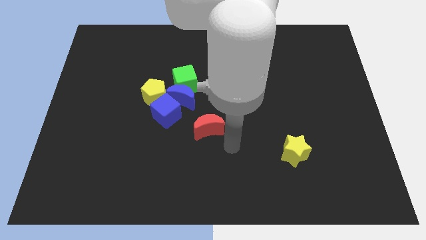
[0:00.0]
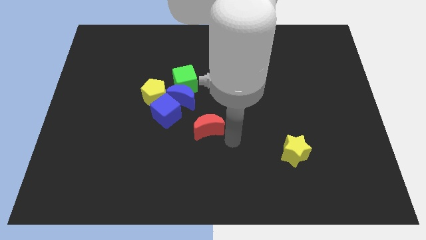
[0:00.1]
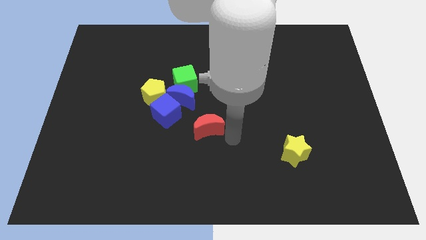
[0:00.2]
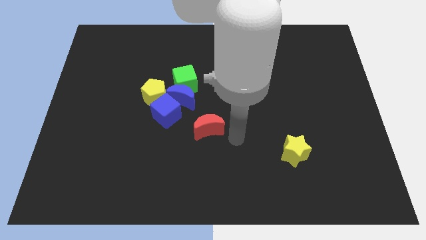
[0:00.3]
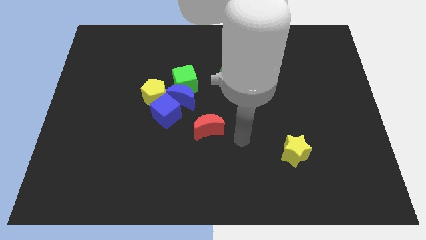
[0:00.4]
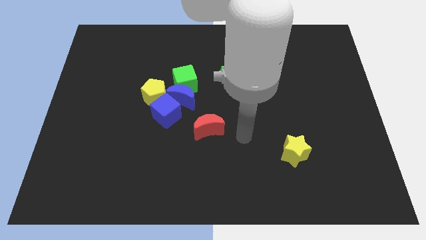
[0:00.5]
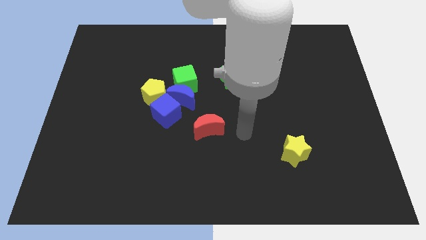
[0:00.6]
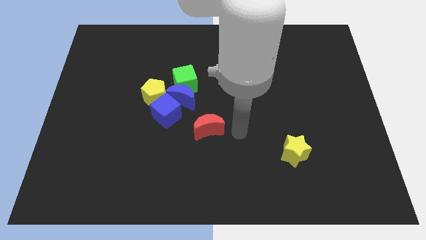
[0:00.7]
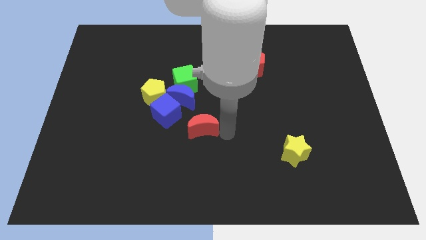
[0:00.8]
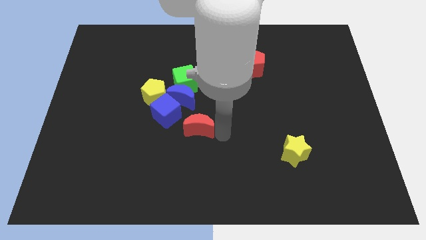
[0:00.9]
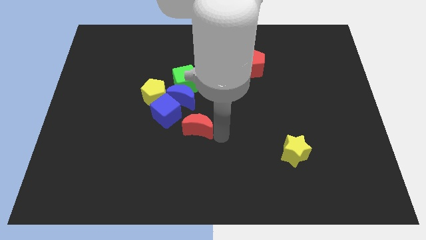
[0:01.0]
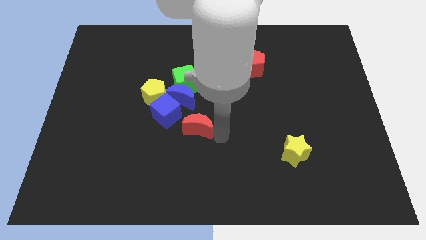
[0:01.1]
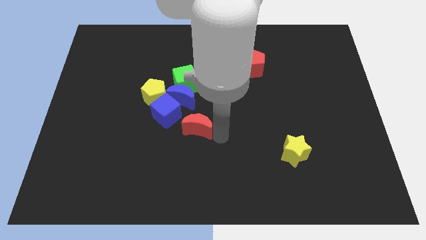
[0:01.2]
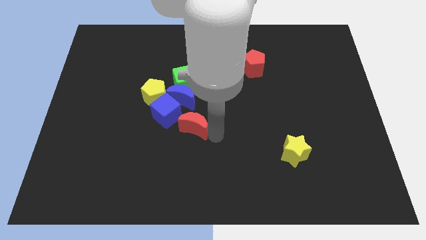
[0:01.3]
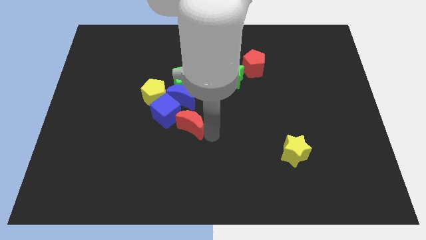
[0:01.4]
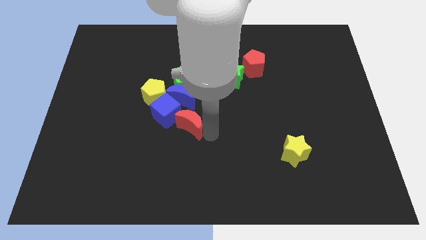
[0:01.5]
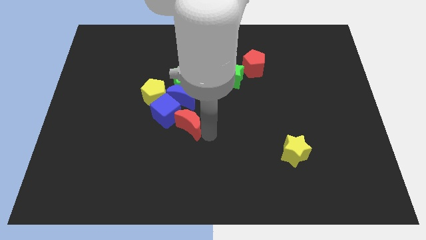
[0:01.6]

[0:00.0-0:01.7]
move the red crescent close to the blue cube

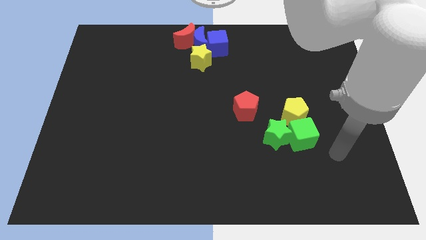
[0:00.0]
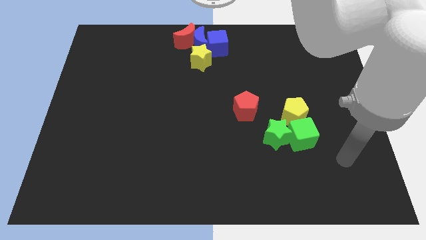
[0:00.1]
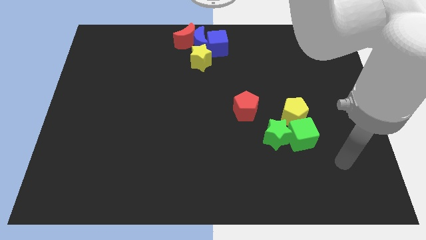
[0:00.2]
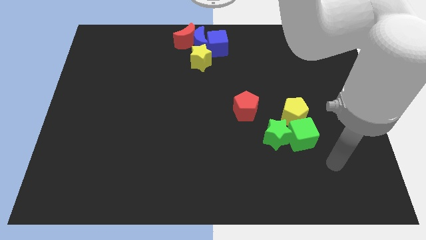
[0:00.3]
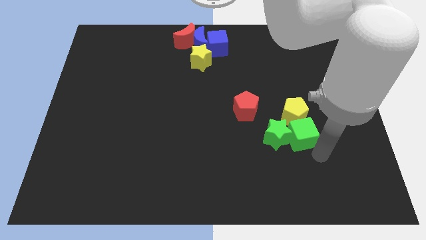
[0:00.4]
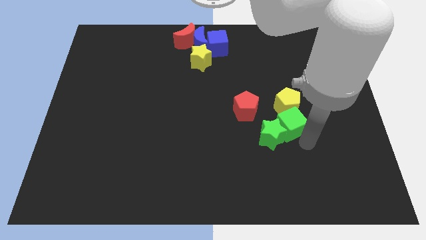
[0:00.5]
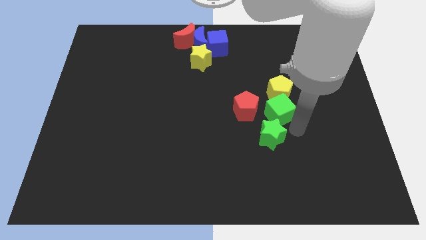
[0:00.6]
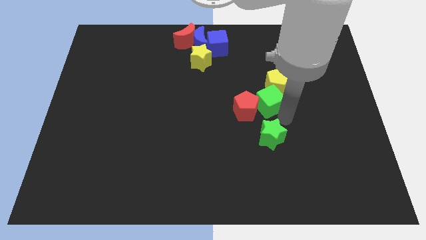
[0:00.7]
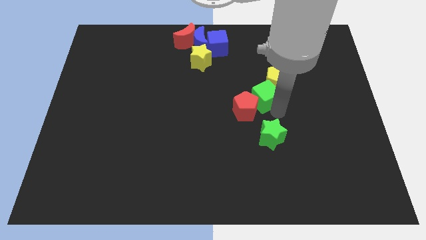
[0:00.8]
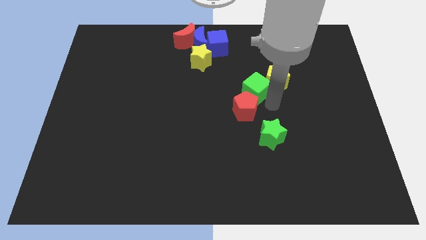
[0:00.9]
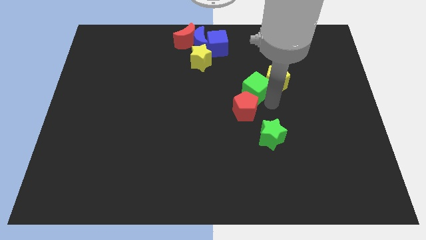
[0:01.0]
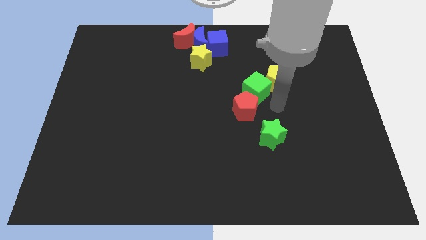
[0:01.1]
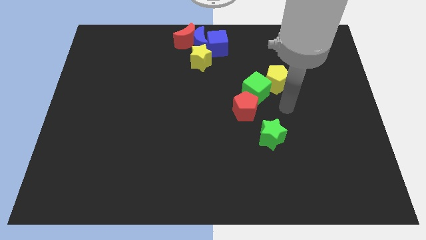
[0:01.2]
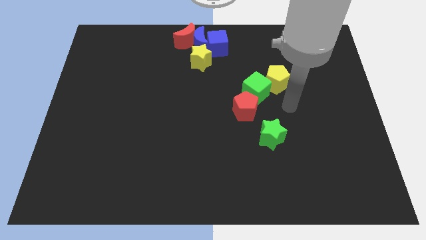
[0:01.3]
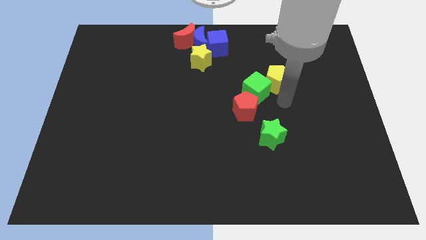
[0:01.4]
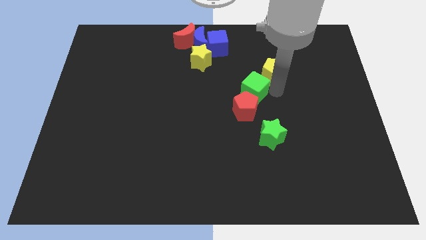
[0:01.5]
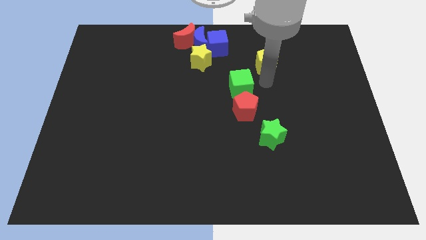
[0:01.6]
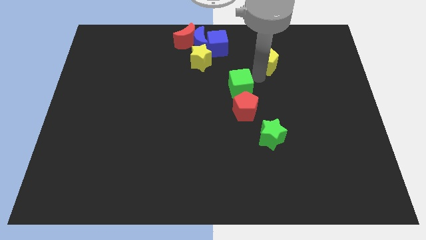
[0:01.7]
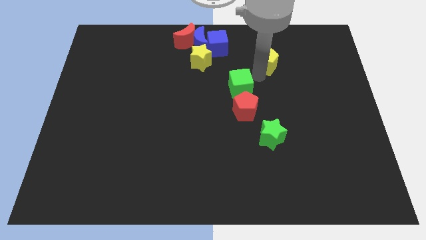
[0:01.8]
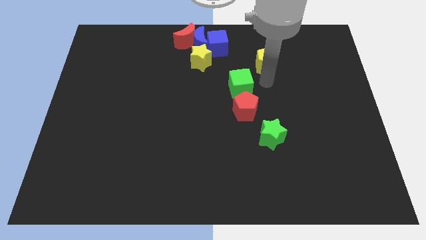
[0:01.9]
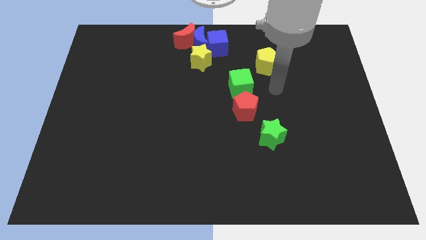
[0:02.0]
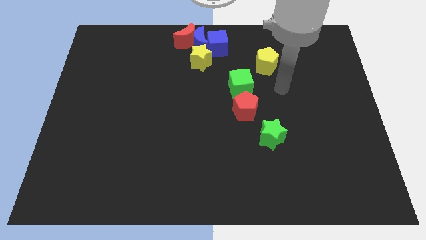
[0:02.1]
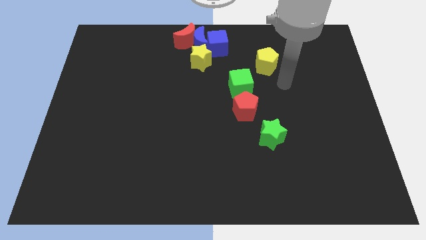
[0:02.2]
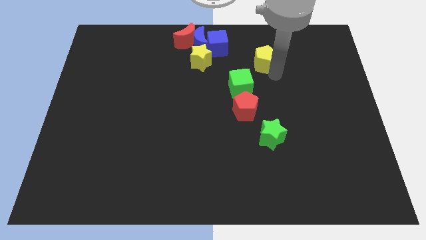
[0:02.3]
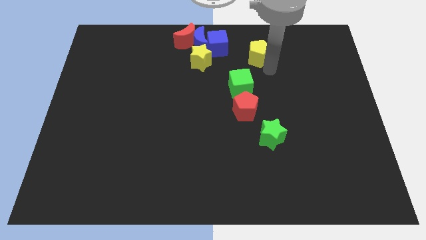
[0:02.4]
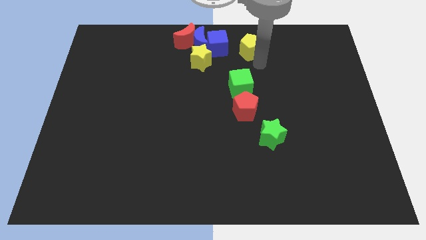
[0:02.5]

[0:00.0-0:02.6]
move the green cube and yellow pentagon to the top center

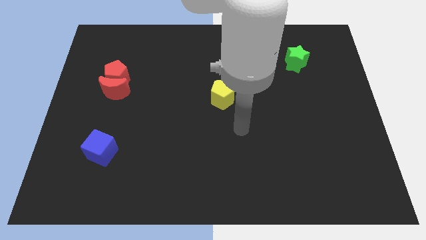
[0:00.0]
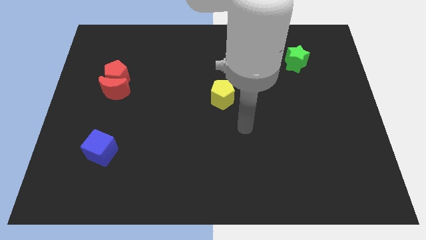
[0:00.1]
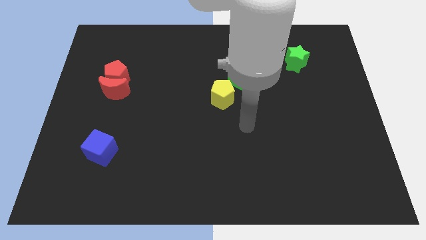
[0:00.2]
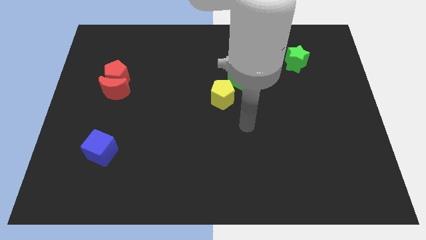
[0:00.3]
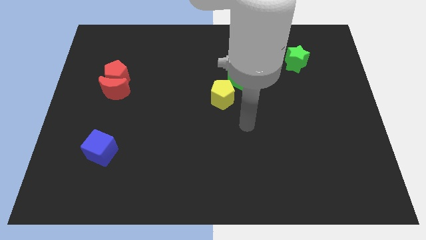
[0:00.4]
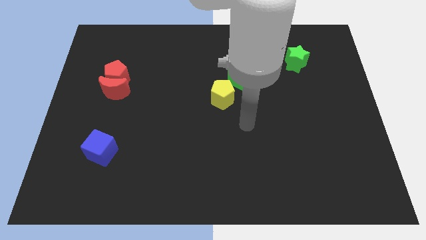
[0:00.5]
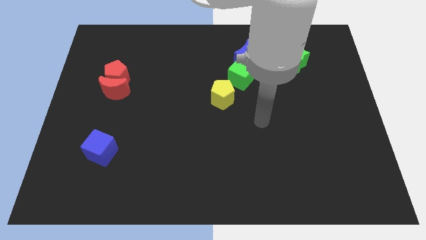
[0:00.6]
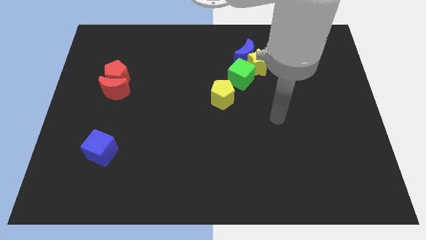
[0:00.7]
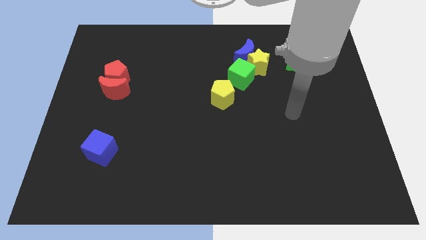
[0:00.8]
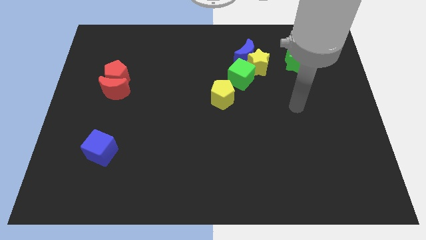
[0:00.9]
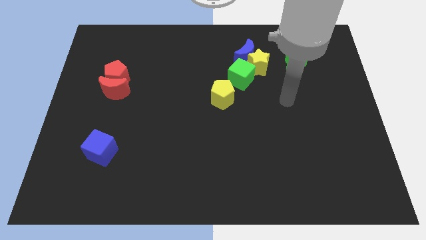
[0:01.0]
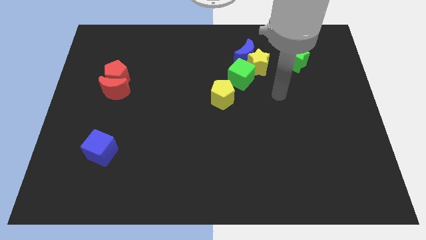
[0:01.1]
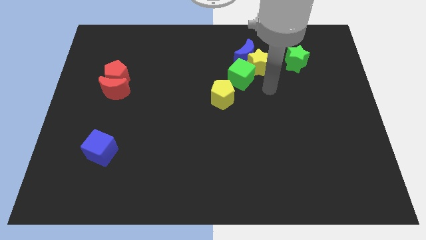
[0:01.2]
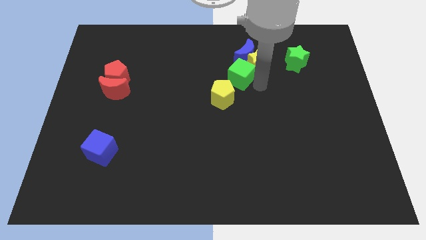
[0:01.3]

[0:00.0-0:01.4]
place the arm to the right side of the green cube

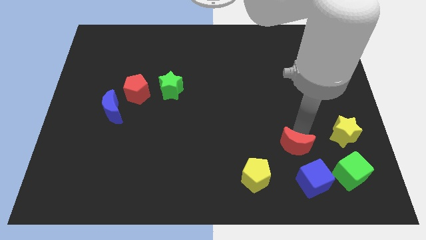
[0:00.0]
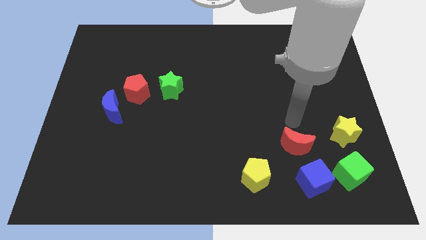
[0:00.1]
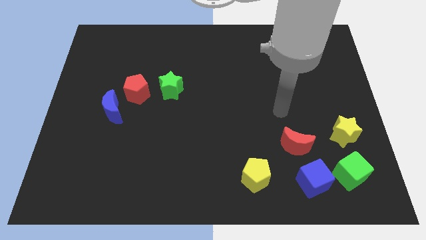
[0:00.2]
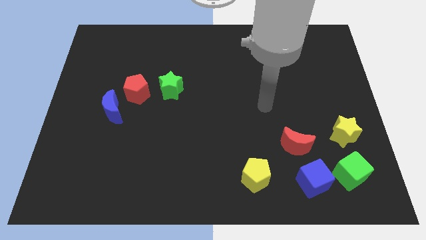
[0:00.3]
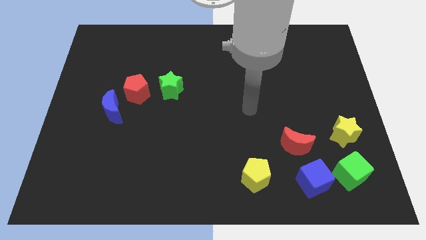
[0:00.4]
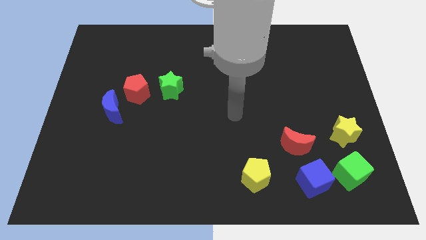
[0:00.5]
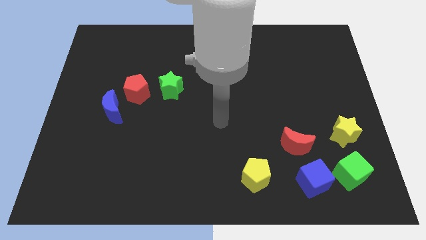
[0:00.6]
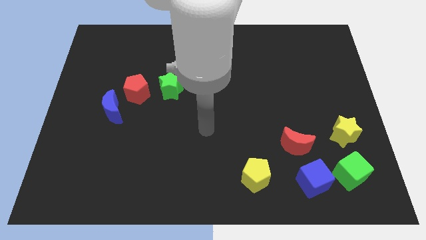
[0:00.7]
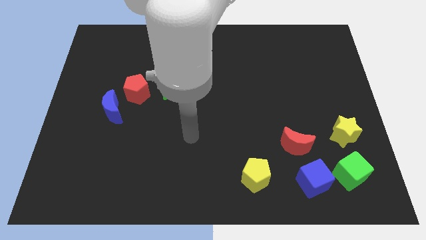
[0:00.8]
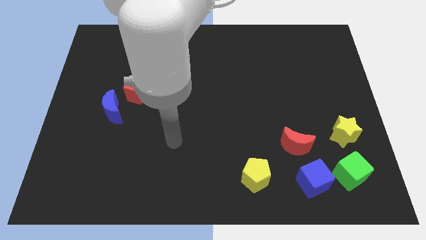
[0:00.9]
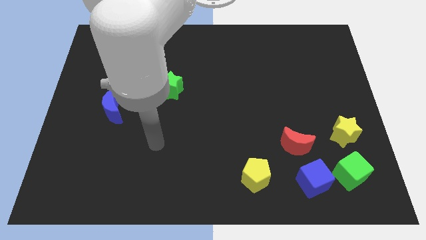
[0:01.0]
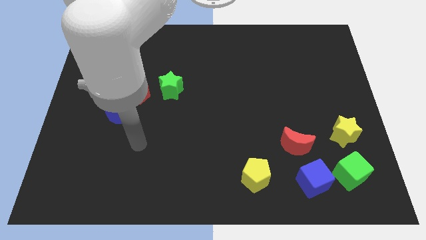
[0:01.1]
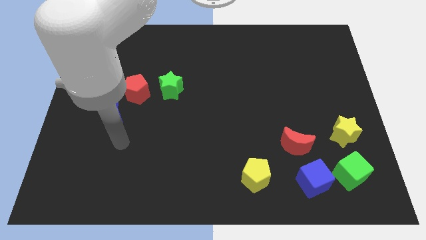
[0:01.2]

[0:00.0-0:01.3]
point your arm at the bottom of the blue crescent

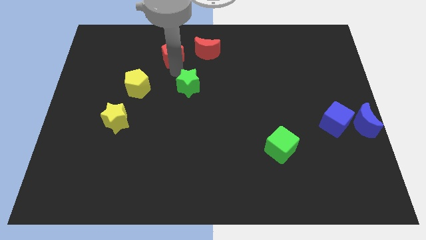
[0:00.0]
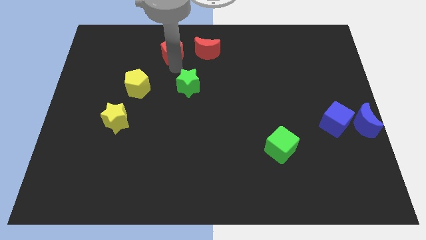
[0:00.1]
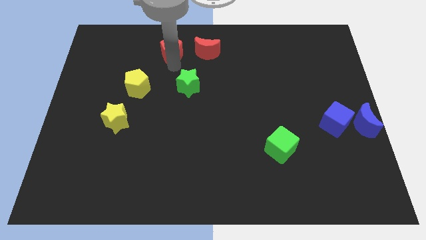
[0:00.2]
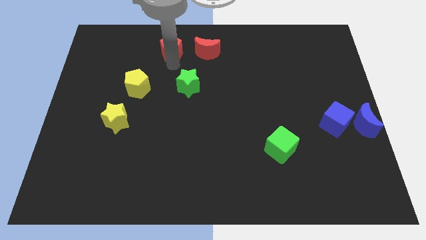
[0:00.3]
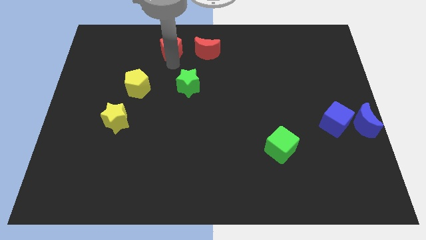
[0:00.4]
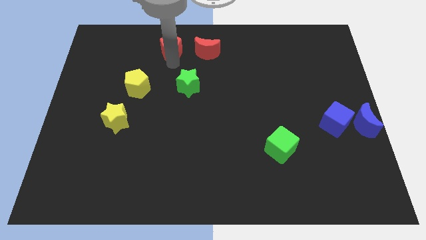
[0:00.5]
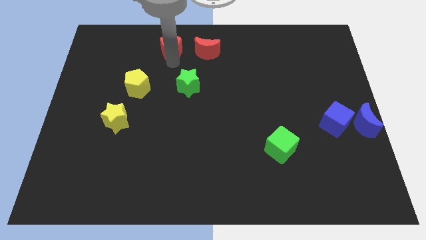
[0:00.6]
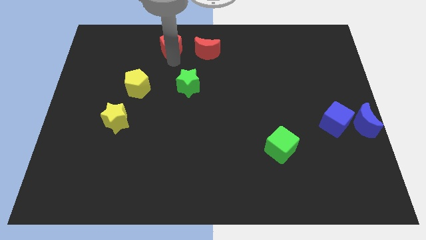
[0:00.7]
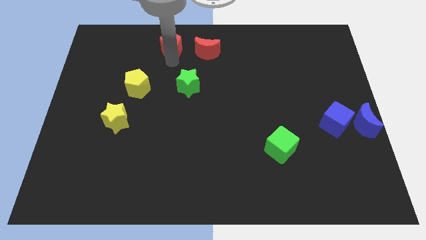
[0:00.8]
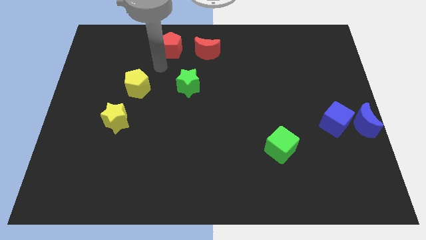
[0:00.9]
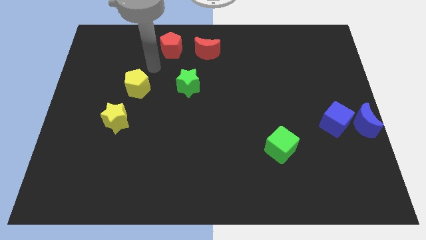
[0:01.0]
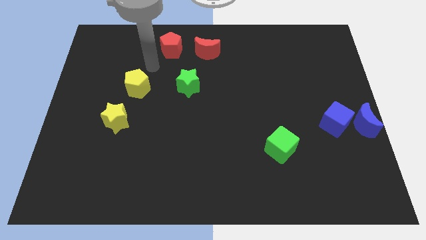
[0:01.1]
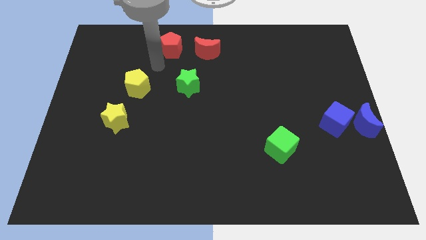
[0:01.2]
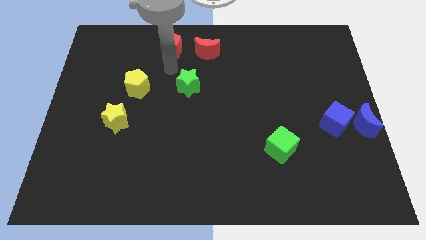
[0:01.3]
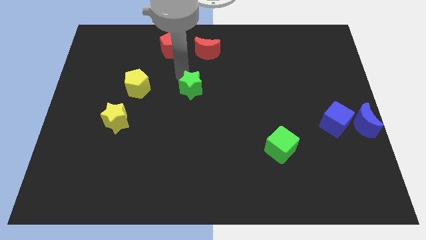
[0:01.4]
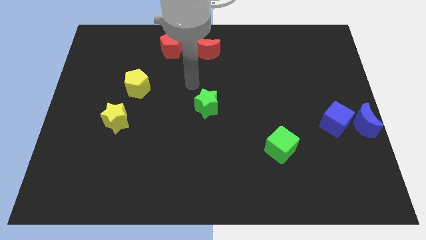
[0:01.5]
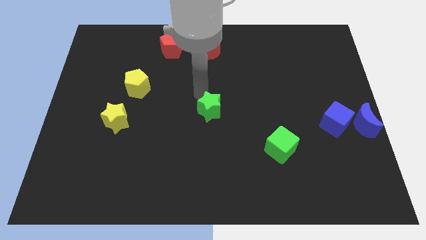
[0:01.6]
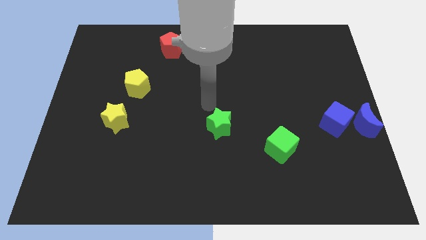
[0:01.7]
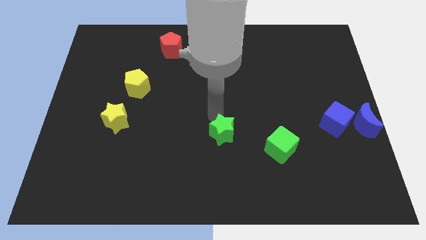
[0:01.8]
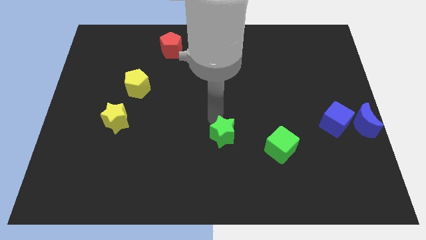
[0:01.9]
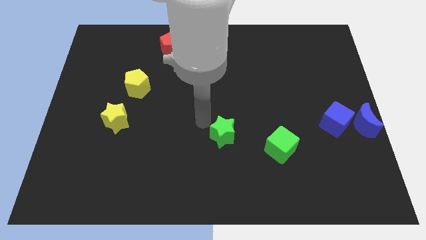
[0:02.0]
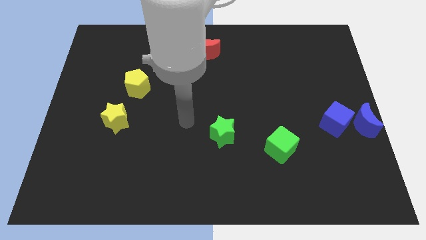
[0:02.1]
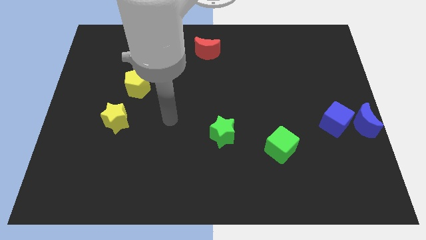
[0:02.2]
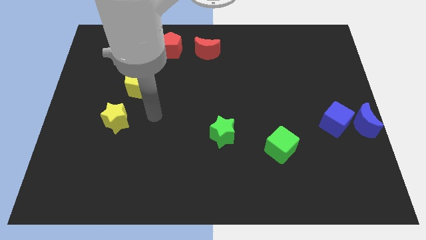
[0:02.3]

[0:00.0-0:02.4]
place the green star to the left of green cube
